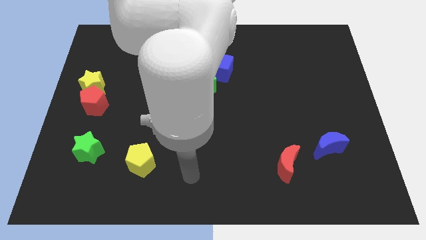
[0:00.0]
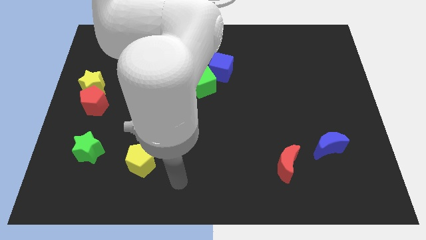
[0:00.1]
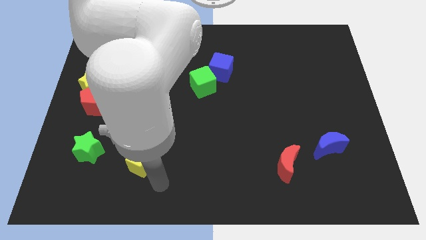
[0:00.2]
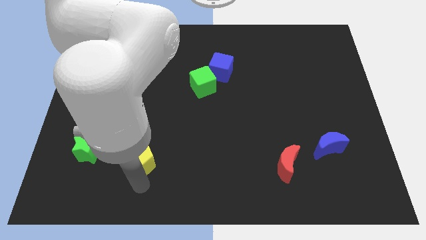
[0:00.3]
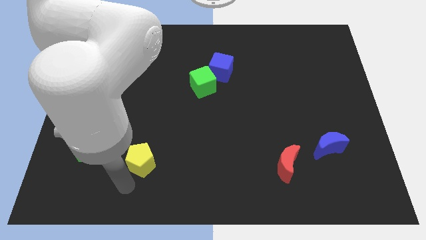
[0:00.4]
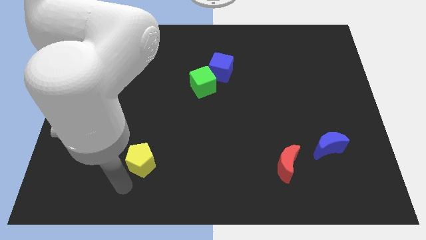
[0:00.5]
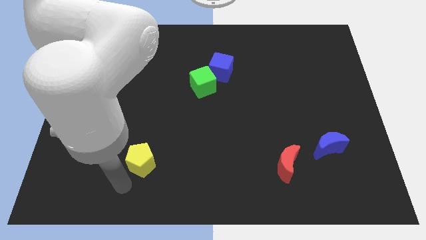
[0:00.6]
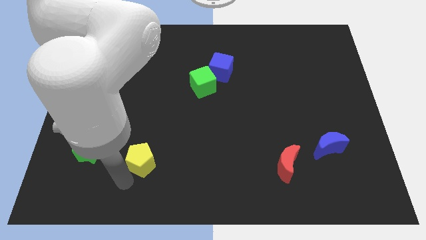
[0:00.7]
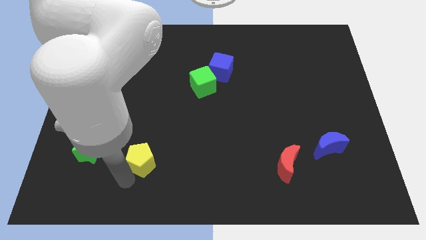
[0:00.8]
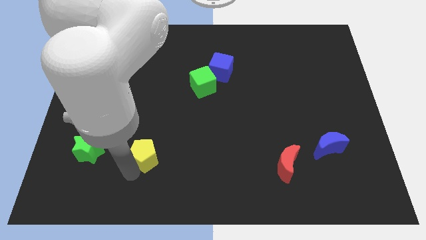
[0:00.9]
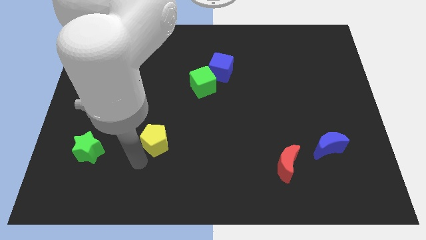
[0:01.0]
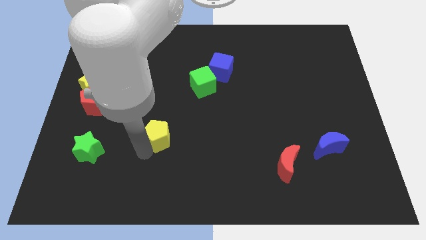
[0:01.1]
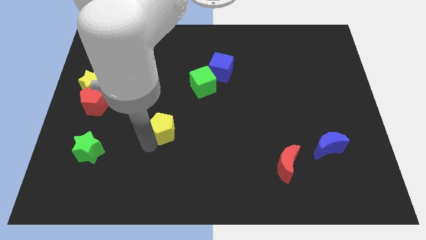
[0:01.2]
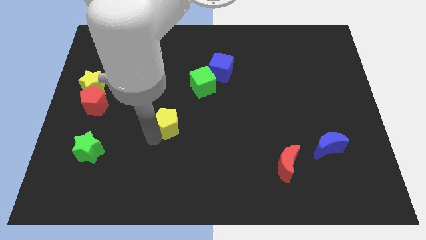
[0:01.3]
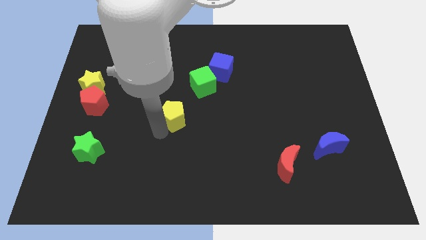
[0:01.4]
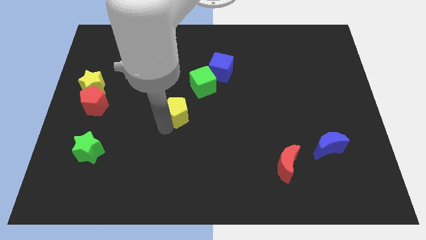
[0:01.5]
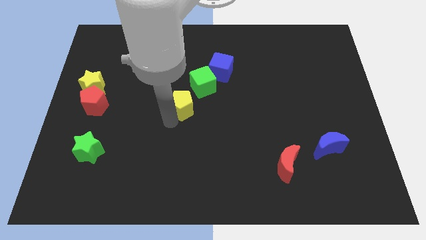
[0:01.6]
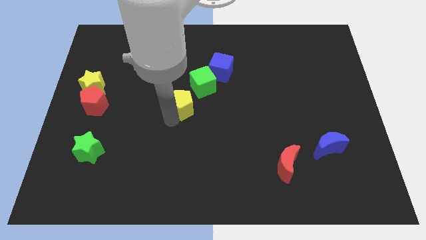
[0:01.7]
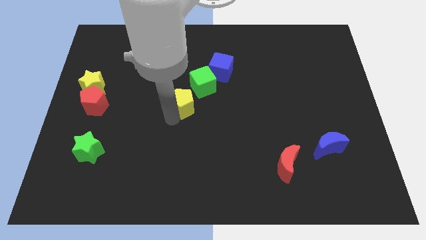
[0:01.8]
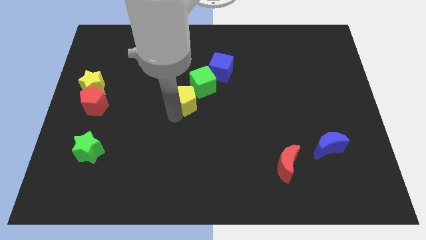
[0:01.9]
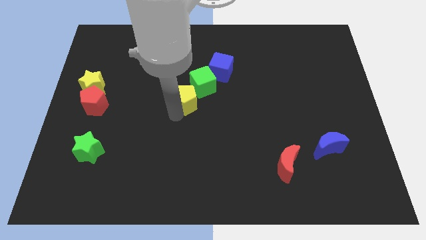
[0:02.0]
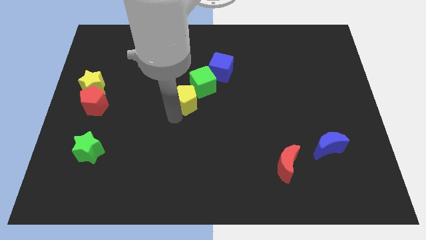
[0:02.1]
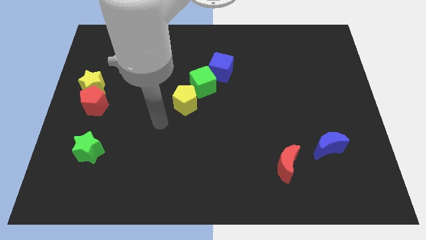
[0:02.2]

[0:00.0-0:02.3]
push yellow pentagon diagonally left bottom to green cube

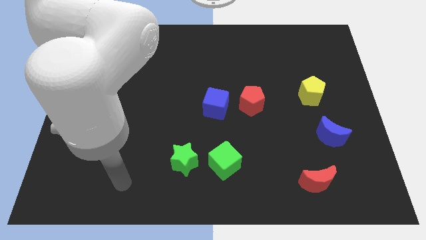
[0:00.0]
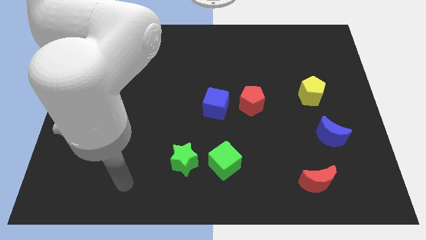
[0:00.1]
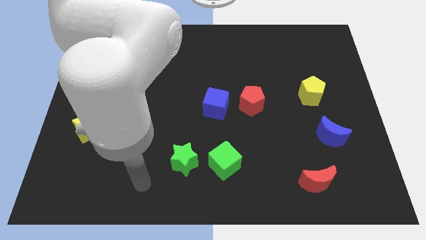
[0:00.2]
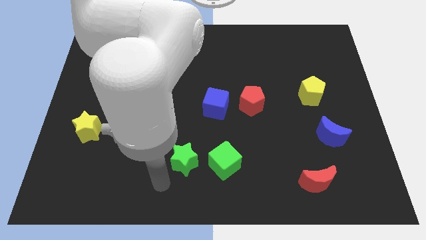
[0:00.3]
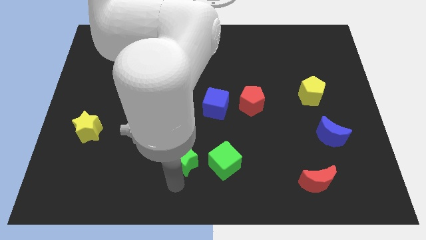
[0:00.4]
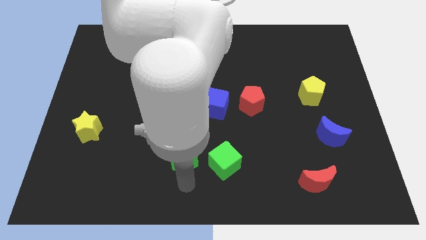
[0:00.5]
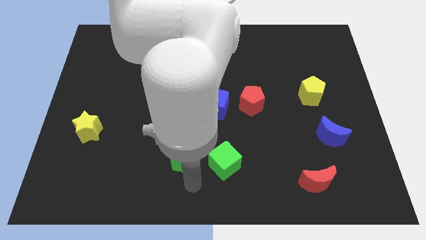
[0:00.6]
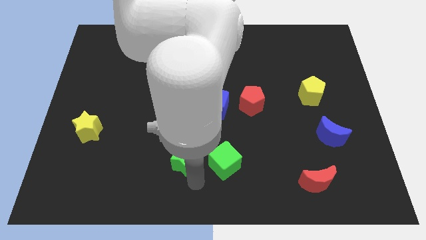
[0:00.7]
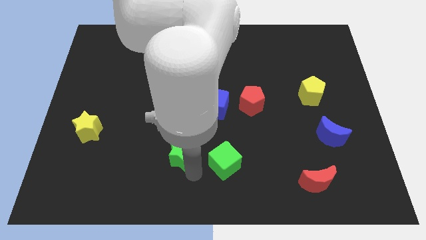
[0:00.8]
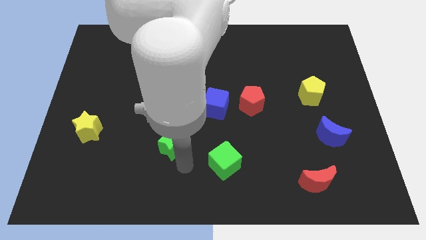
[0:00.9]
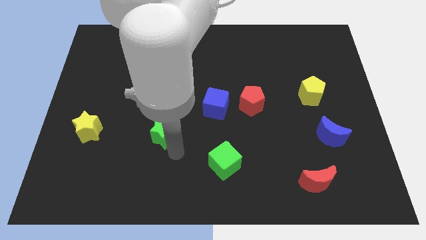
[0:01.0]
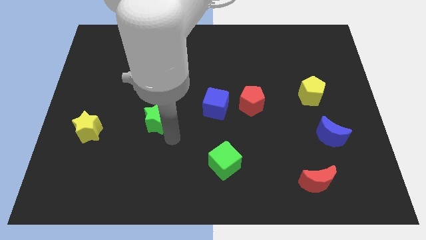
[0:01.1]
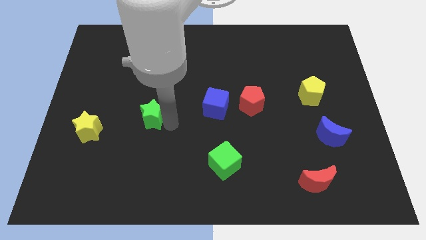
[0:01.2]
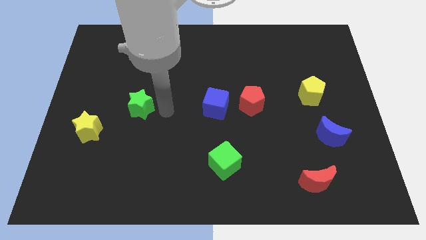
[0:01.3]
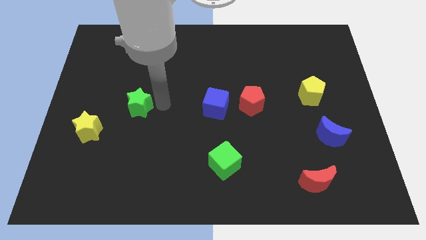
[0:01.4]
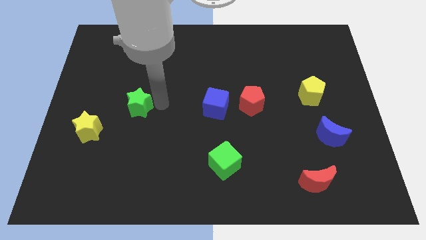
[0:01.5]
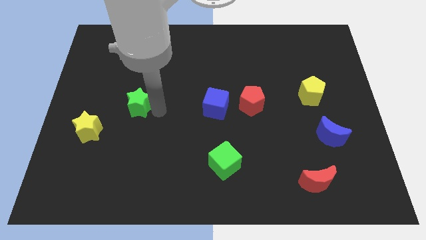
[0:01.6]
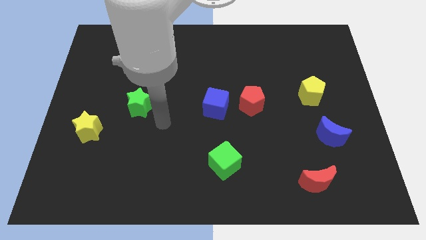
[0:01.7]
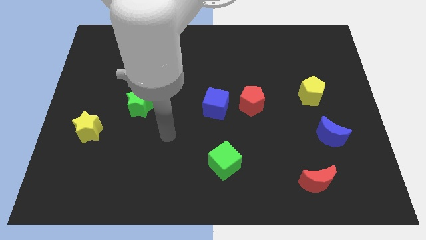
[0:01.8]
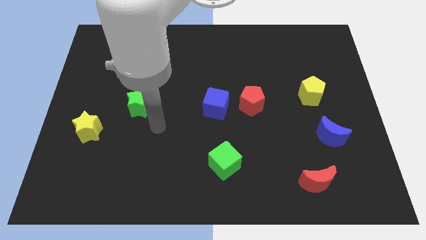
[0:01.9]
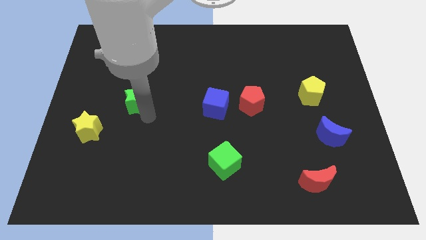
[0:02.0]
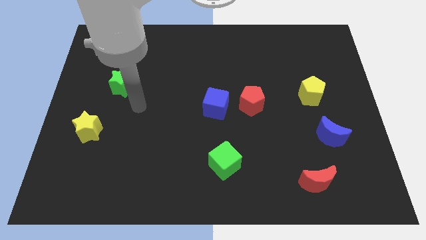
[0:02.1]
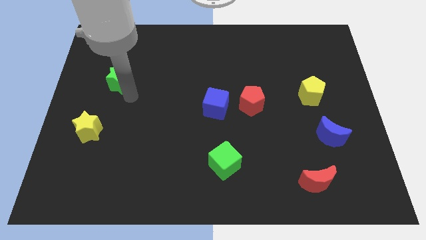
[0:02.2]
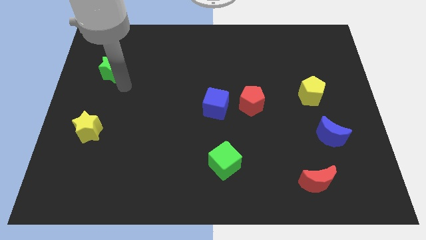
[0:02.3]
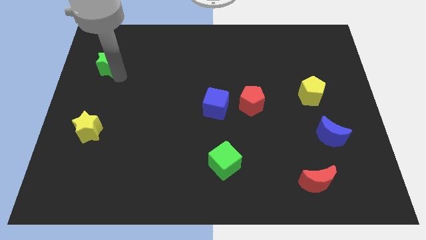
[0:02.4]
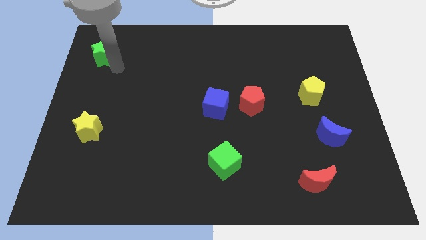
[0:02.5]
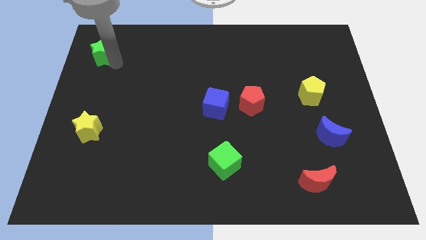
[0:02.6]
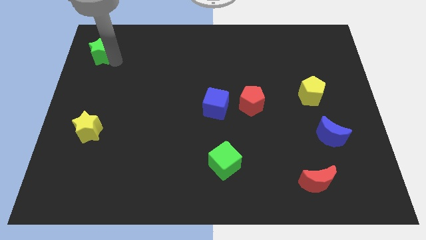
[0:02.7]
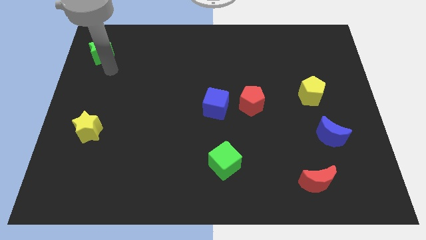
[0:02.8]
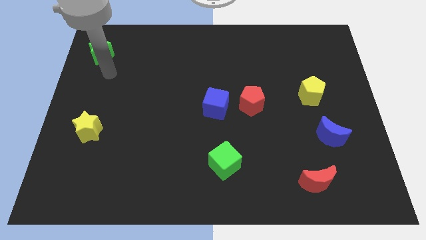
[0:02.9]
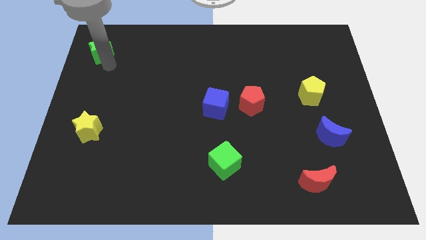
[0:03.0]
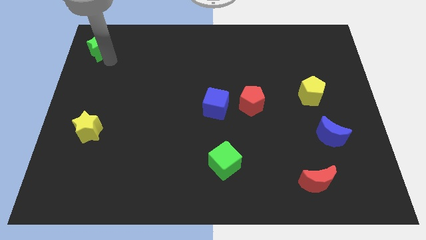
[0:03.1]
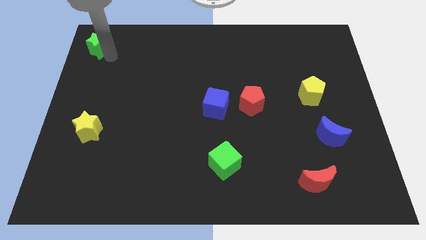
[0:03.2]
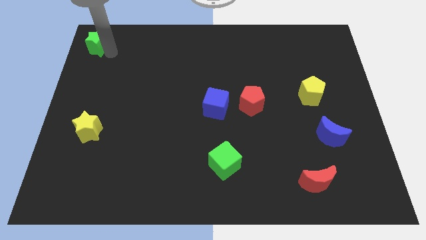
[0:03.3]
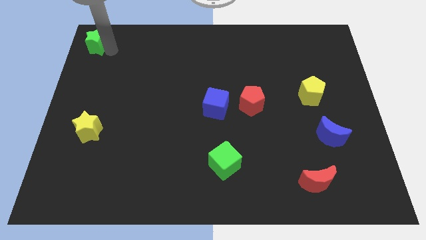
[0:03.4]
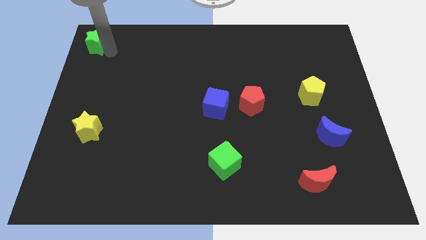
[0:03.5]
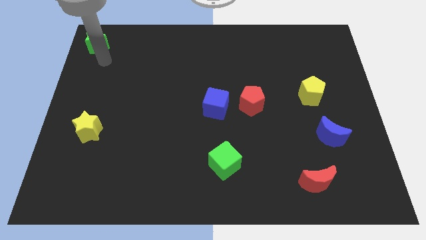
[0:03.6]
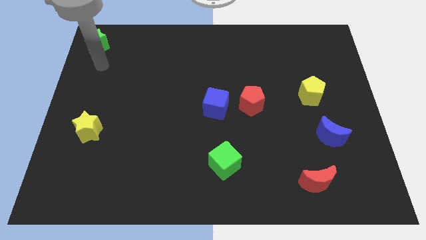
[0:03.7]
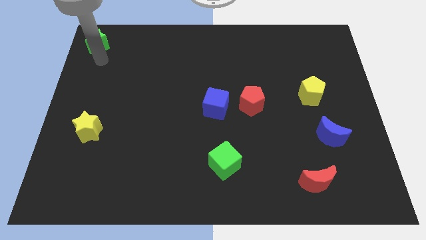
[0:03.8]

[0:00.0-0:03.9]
move green star to the top left corner

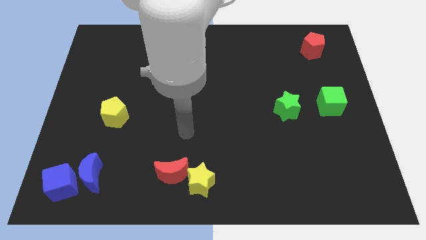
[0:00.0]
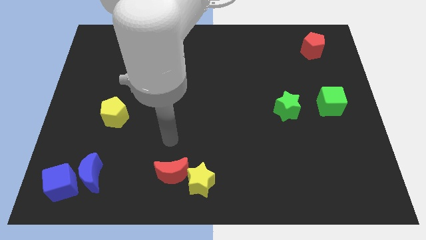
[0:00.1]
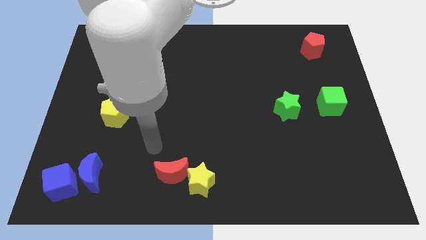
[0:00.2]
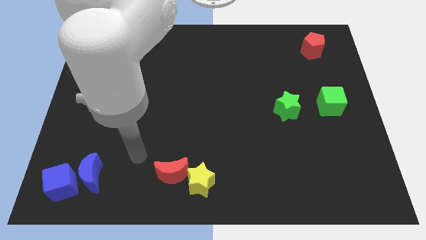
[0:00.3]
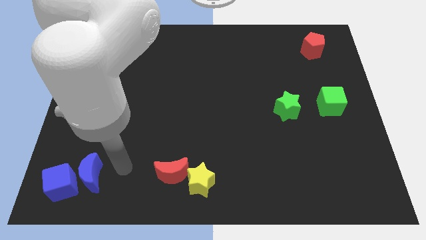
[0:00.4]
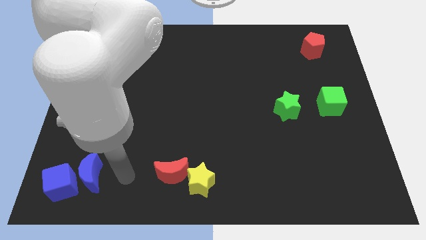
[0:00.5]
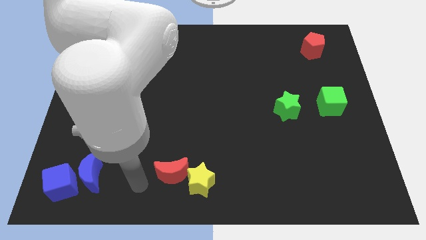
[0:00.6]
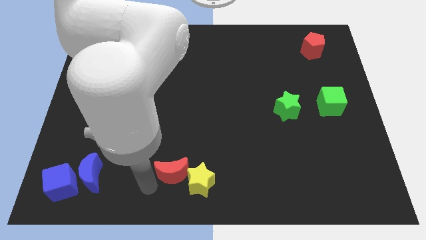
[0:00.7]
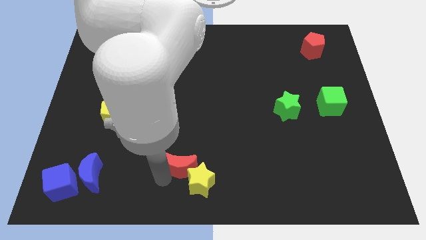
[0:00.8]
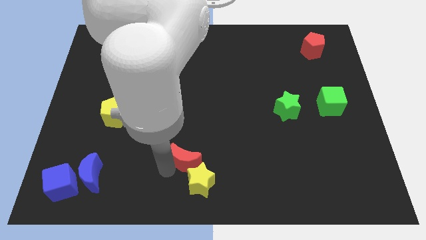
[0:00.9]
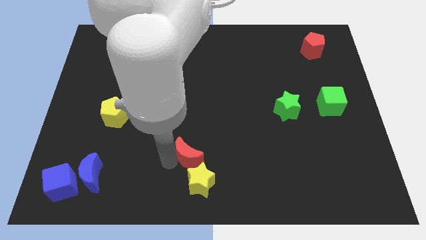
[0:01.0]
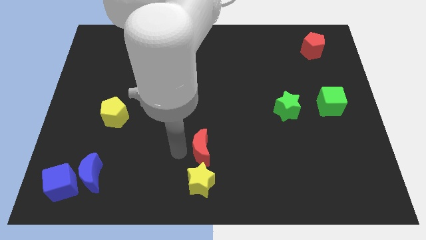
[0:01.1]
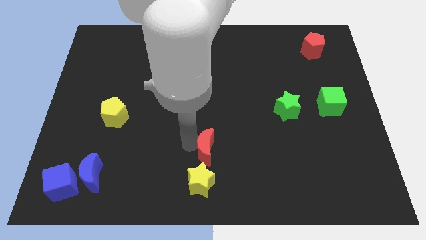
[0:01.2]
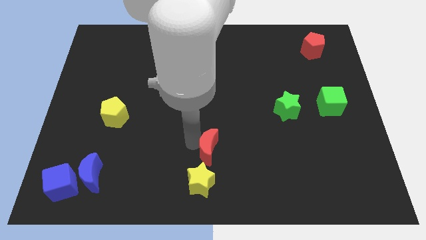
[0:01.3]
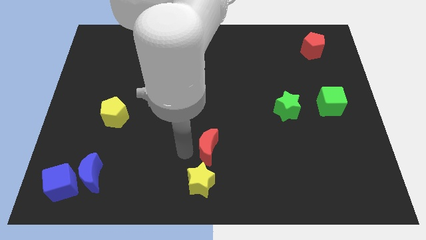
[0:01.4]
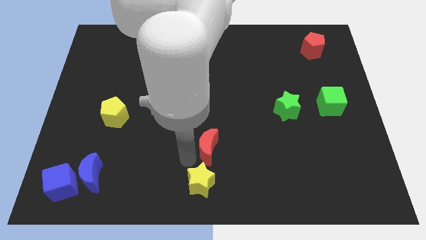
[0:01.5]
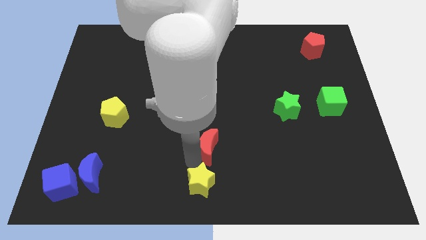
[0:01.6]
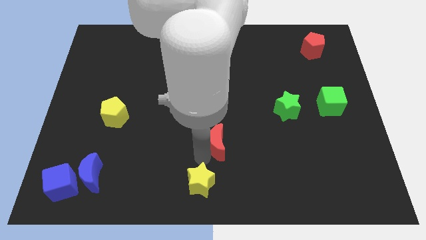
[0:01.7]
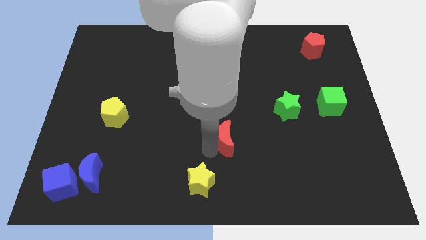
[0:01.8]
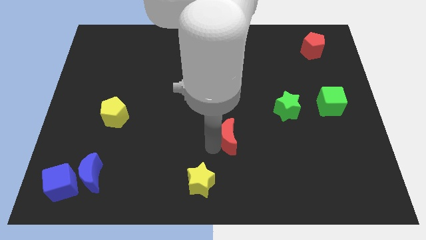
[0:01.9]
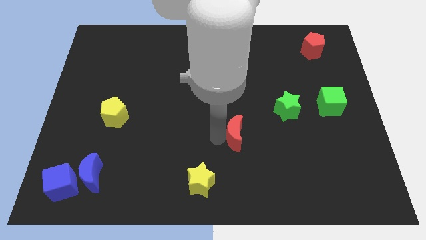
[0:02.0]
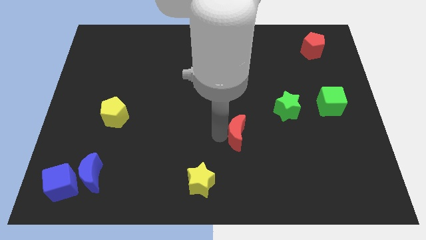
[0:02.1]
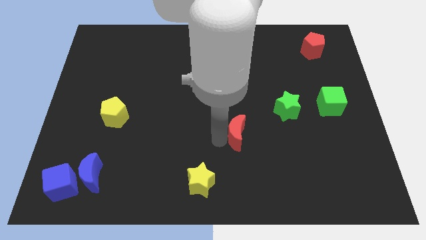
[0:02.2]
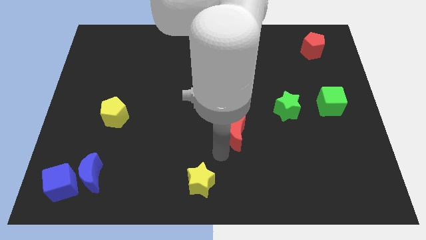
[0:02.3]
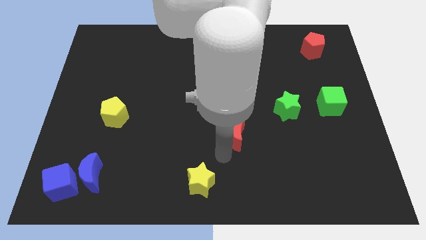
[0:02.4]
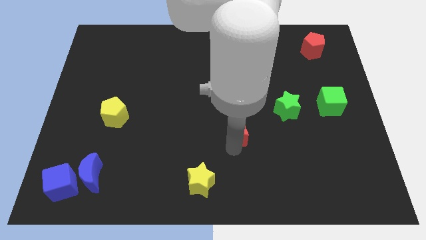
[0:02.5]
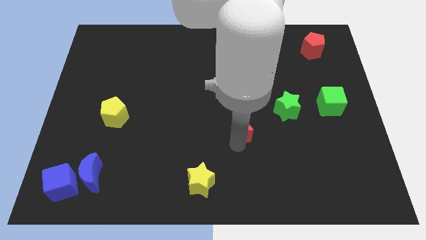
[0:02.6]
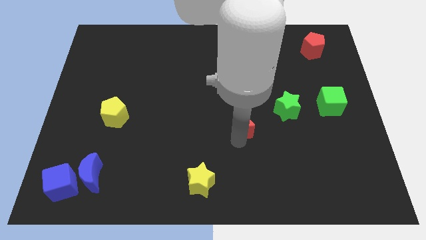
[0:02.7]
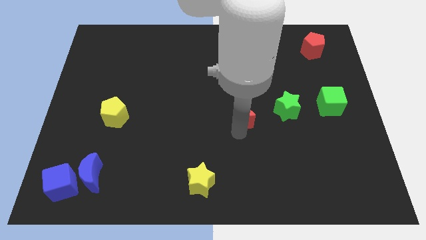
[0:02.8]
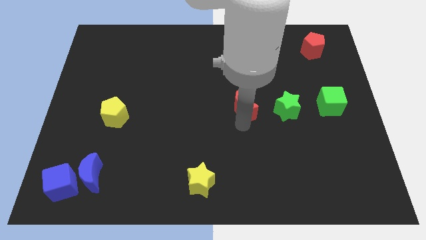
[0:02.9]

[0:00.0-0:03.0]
place the red moon to the left of the green star
